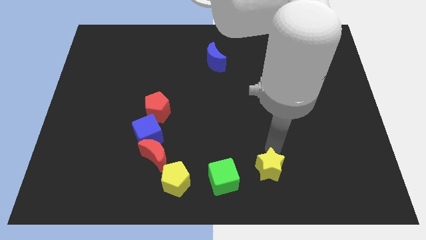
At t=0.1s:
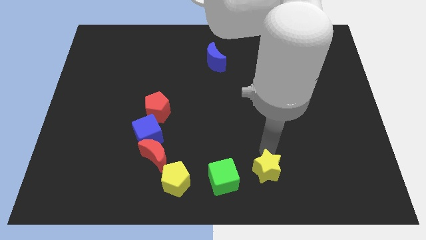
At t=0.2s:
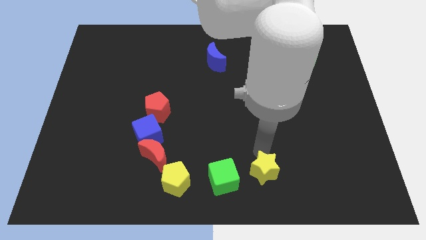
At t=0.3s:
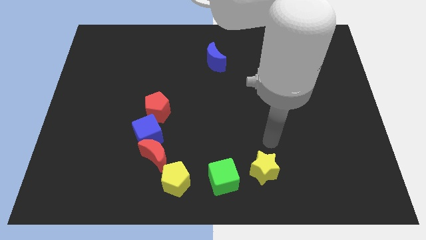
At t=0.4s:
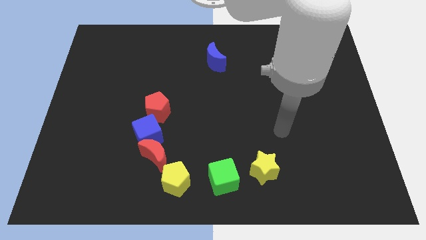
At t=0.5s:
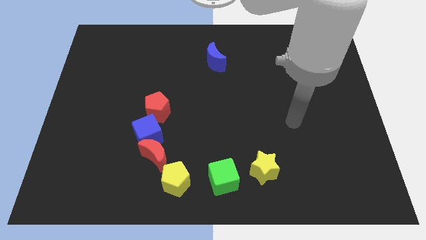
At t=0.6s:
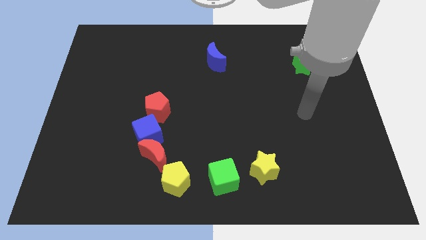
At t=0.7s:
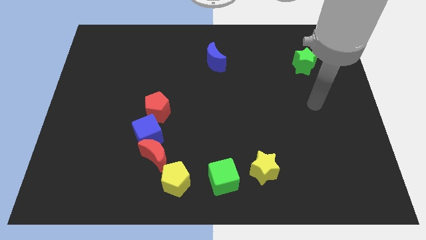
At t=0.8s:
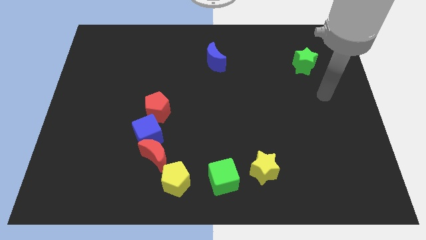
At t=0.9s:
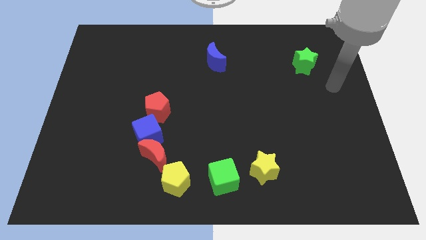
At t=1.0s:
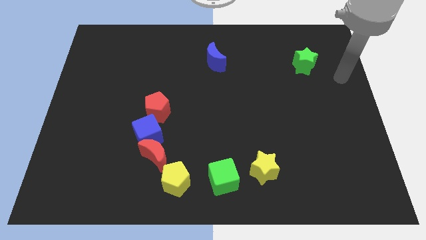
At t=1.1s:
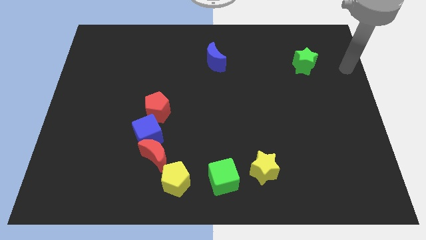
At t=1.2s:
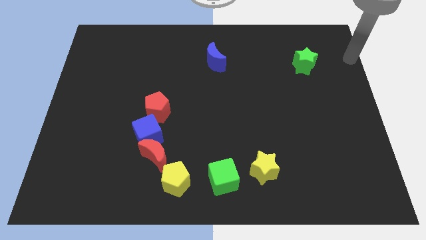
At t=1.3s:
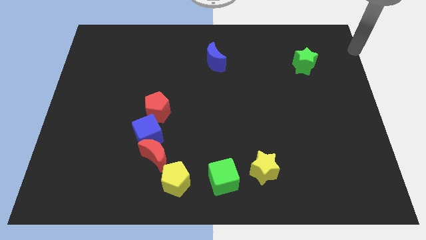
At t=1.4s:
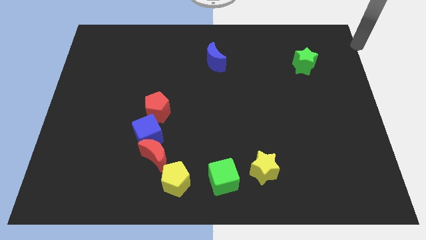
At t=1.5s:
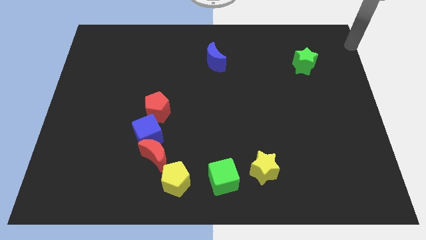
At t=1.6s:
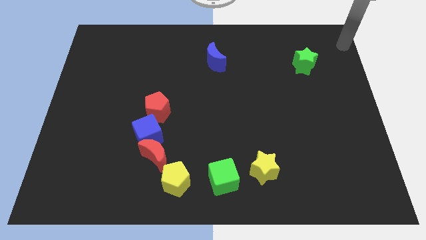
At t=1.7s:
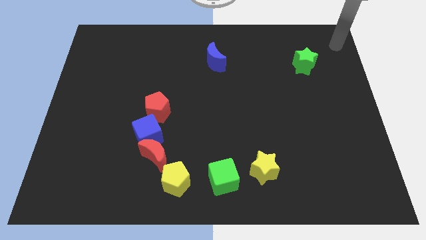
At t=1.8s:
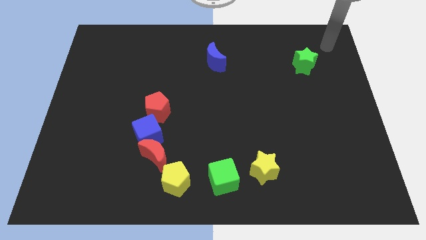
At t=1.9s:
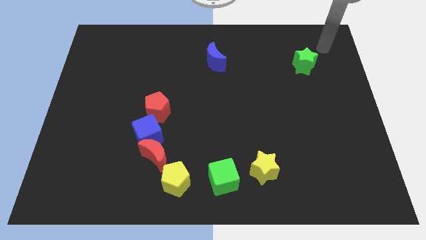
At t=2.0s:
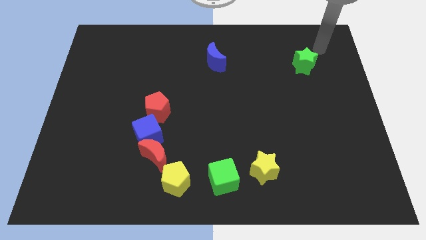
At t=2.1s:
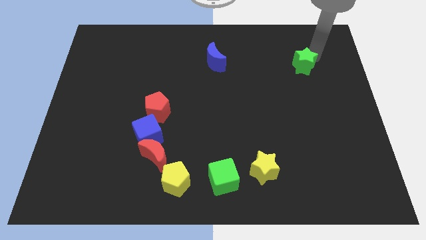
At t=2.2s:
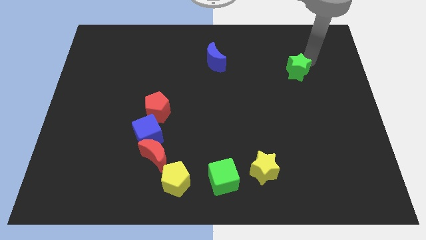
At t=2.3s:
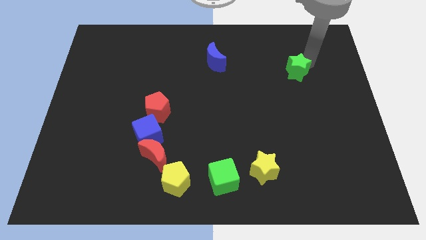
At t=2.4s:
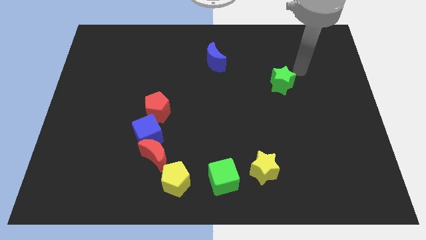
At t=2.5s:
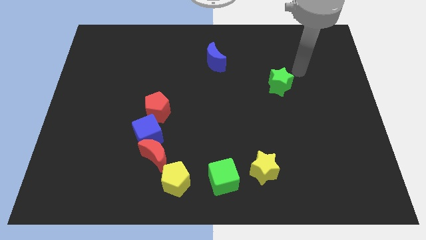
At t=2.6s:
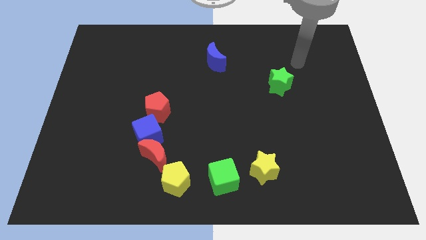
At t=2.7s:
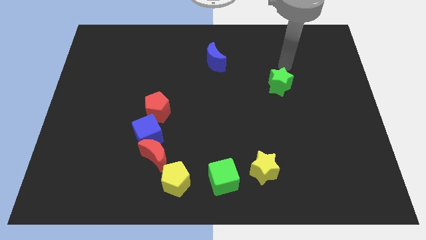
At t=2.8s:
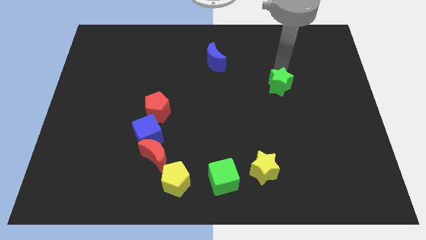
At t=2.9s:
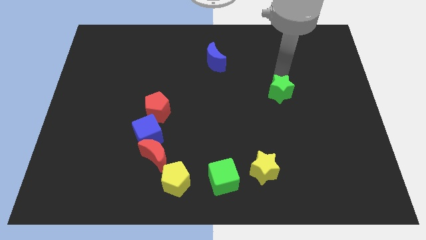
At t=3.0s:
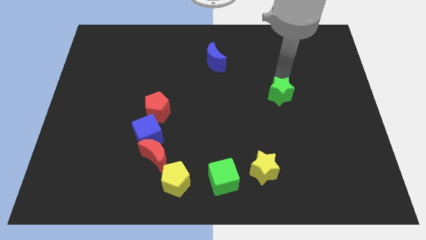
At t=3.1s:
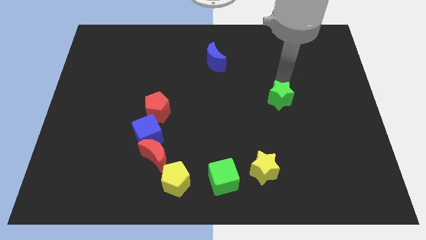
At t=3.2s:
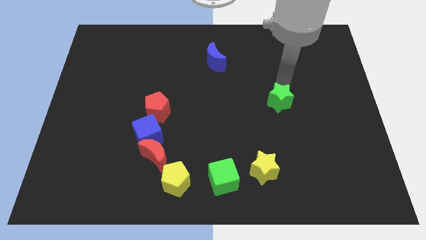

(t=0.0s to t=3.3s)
place the green star diagonally to the blue moon

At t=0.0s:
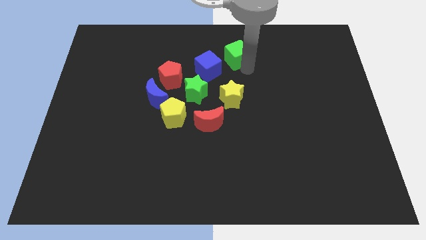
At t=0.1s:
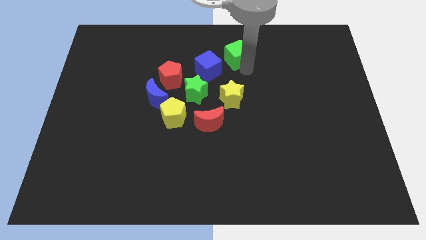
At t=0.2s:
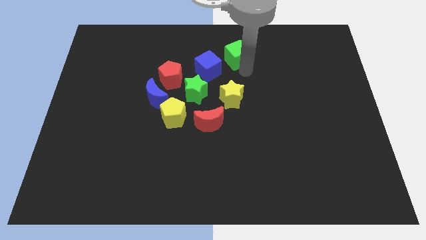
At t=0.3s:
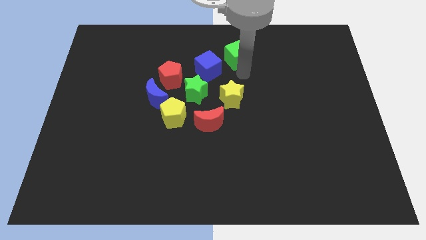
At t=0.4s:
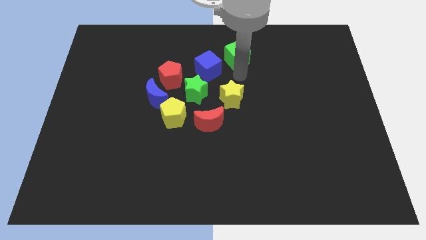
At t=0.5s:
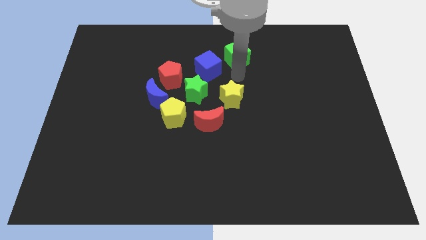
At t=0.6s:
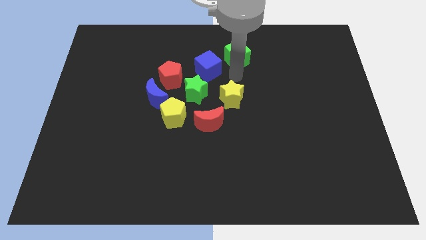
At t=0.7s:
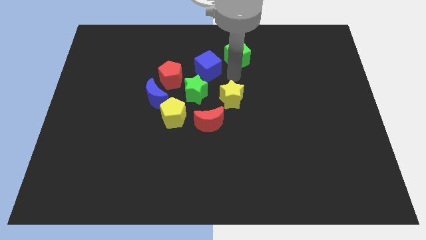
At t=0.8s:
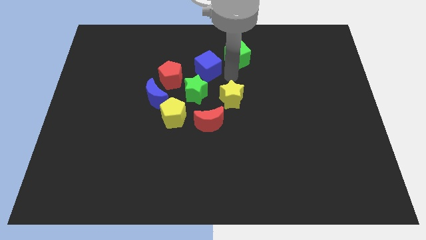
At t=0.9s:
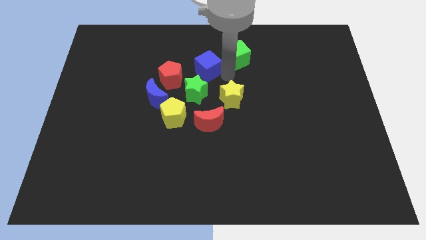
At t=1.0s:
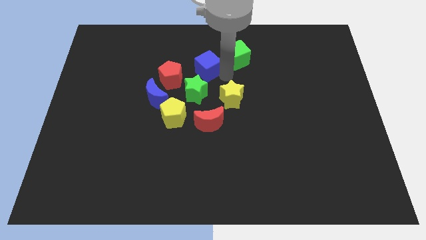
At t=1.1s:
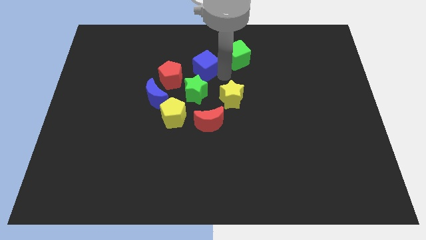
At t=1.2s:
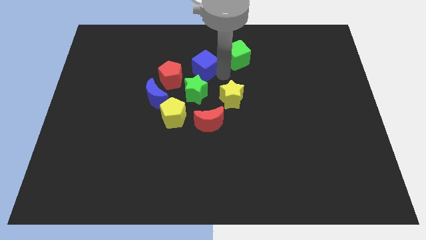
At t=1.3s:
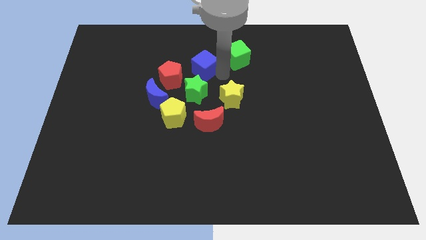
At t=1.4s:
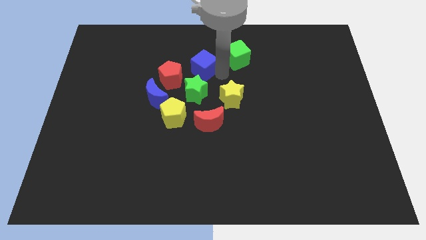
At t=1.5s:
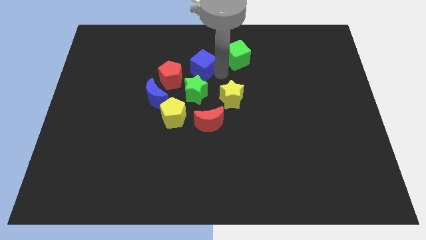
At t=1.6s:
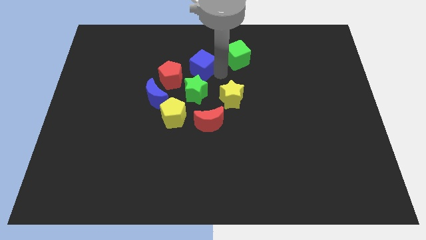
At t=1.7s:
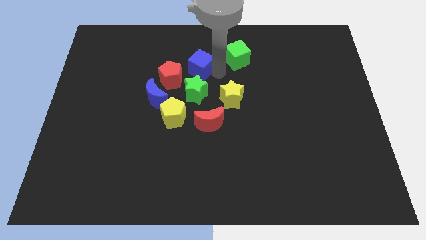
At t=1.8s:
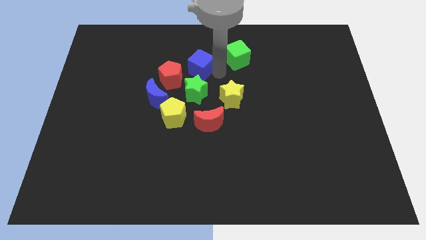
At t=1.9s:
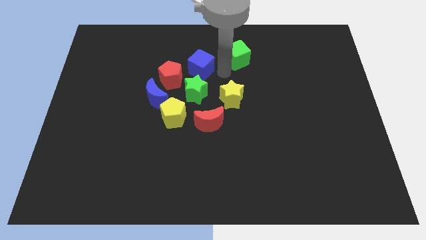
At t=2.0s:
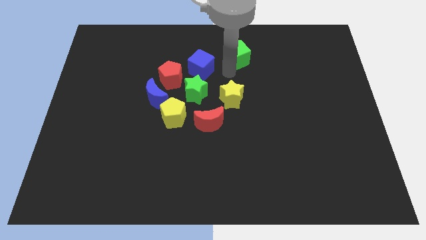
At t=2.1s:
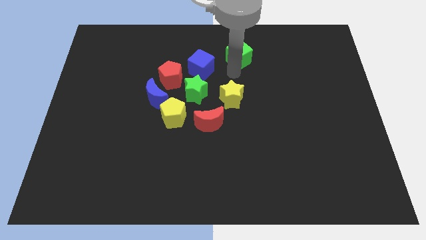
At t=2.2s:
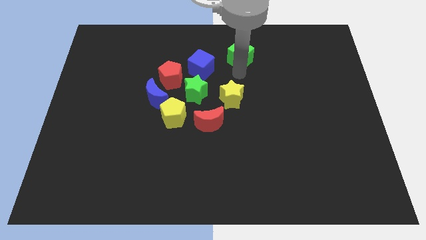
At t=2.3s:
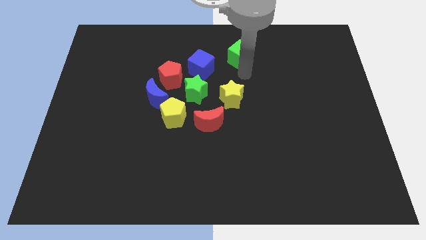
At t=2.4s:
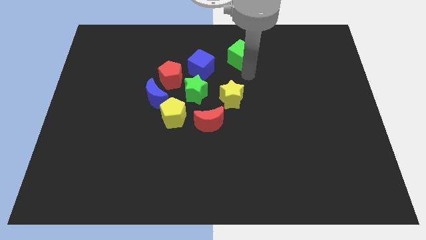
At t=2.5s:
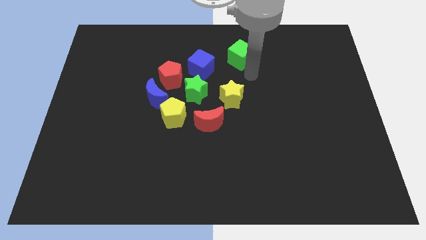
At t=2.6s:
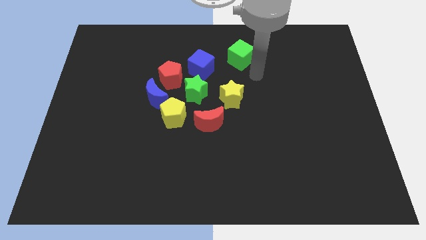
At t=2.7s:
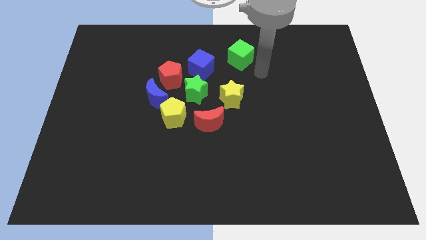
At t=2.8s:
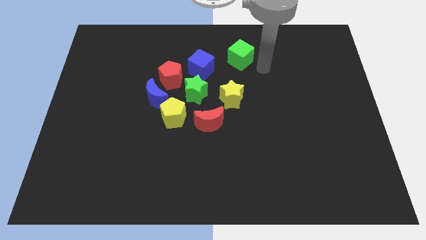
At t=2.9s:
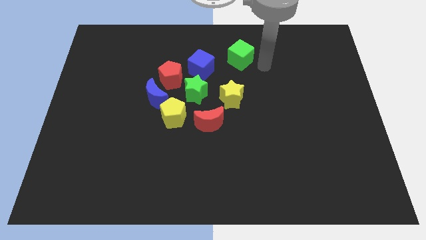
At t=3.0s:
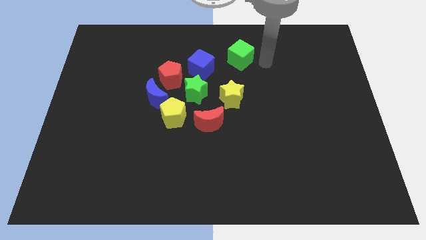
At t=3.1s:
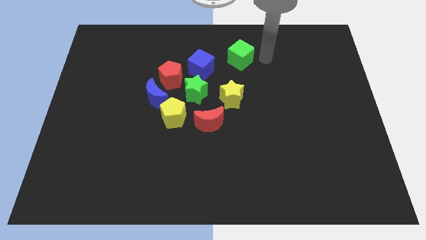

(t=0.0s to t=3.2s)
place the blue cube vertically above the top side of the green star

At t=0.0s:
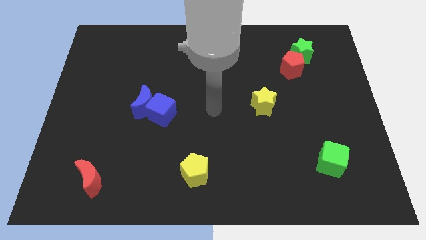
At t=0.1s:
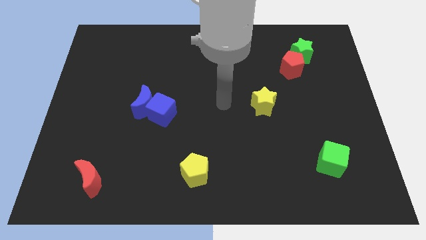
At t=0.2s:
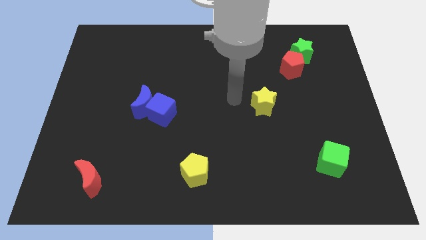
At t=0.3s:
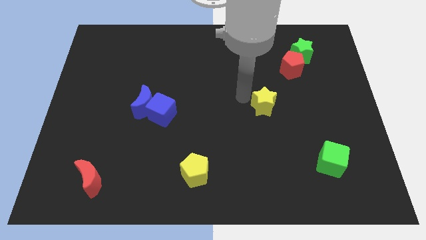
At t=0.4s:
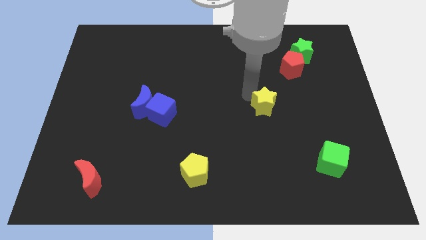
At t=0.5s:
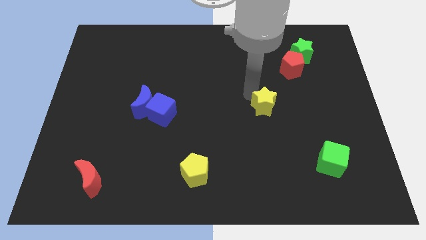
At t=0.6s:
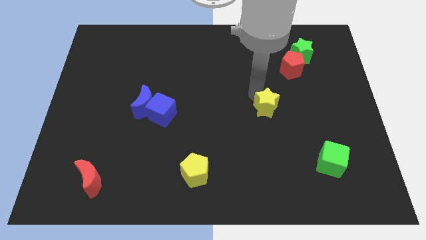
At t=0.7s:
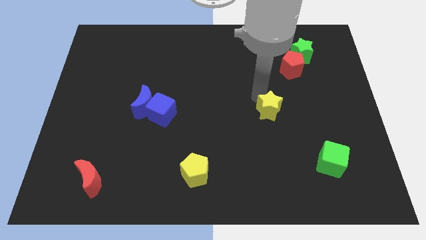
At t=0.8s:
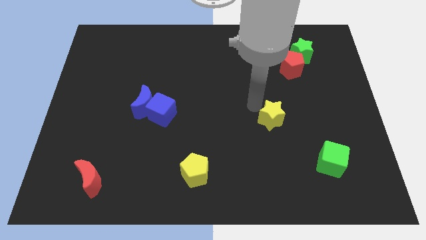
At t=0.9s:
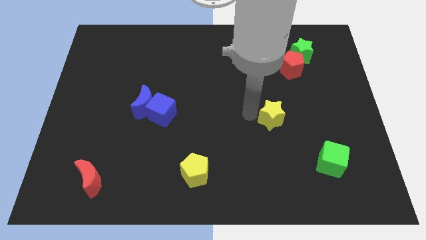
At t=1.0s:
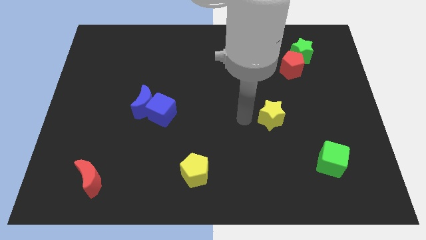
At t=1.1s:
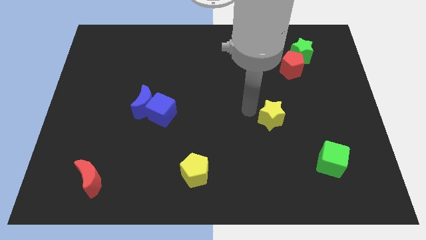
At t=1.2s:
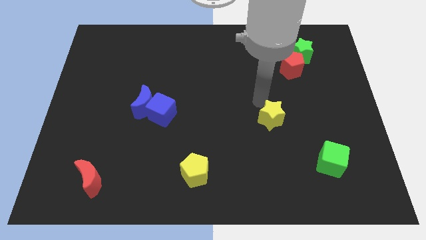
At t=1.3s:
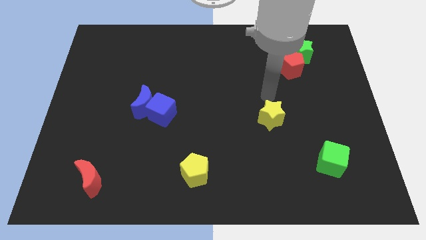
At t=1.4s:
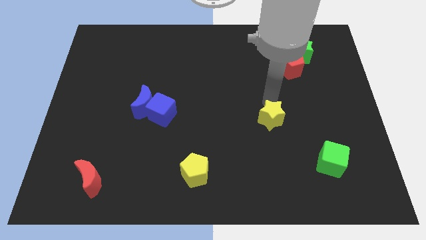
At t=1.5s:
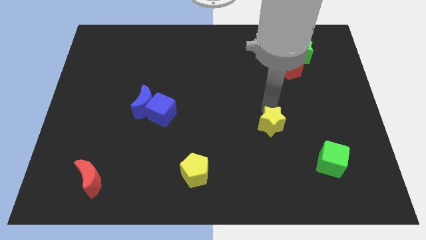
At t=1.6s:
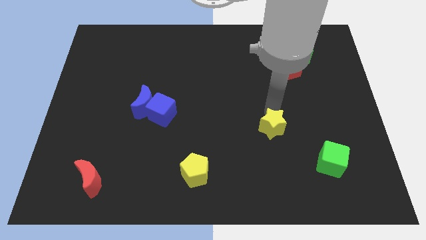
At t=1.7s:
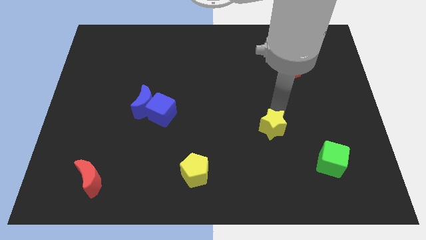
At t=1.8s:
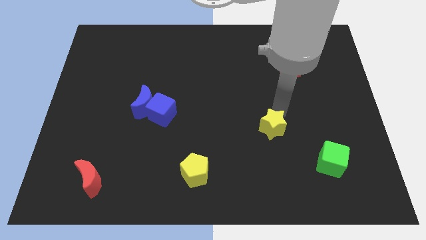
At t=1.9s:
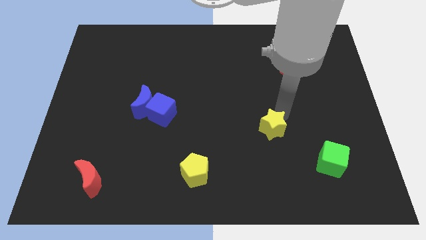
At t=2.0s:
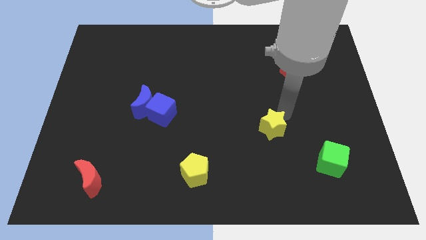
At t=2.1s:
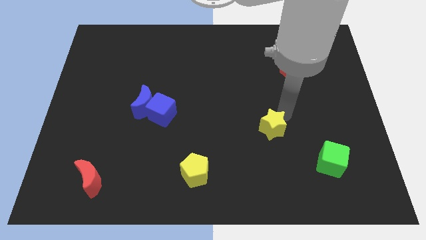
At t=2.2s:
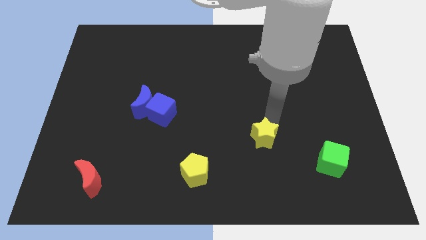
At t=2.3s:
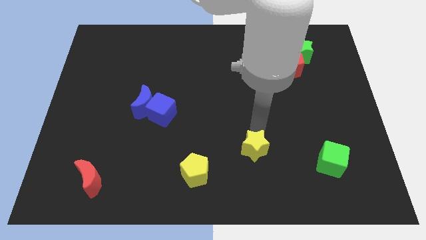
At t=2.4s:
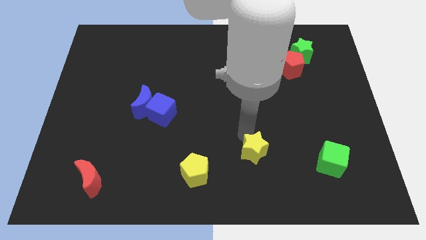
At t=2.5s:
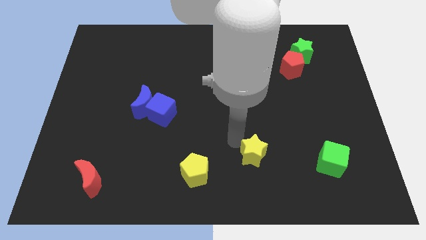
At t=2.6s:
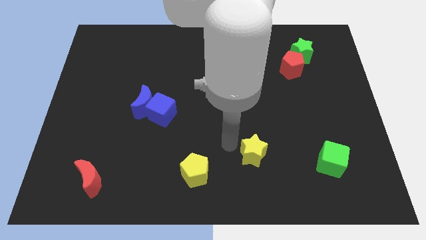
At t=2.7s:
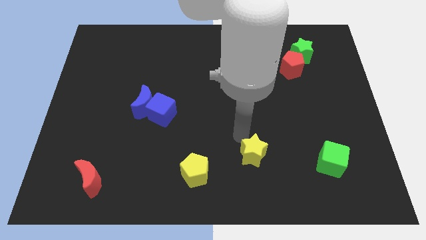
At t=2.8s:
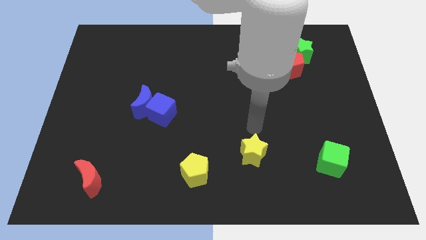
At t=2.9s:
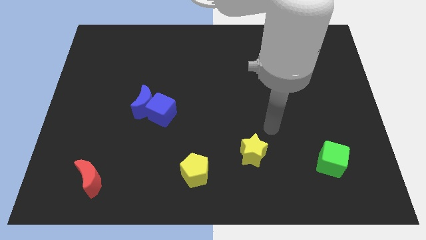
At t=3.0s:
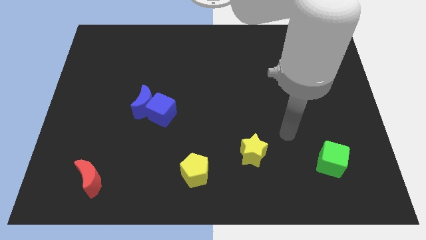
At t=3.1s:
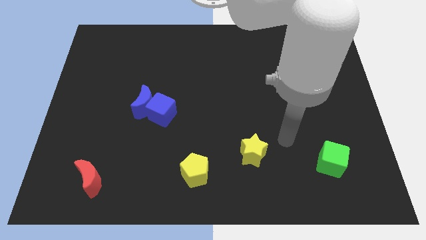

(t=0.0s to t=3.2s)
move yellow star towards center bottom
